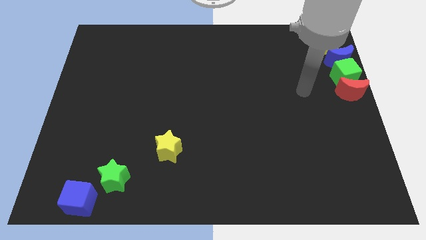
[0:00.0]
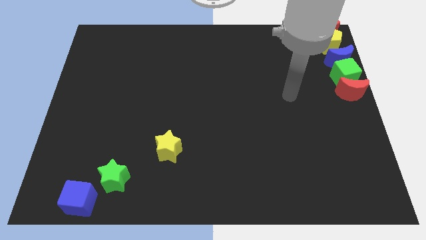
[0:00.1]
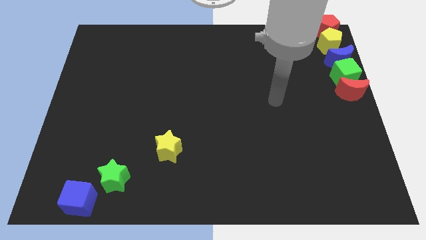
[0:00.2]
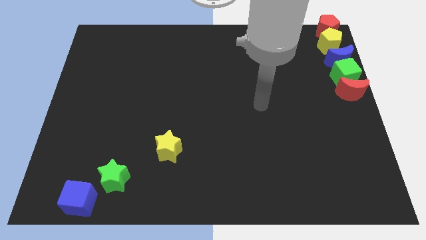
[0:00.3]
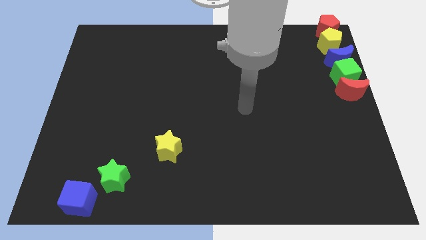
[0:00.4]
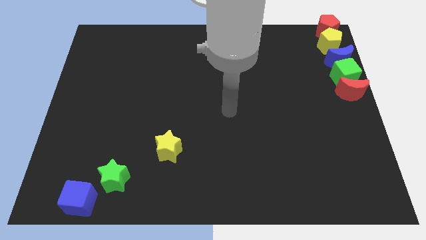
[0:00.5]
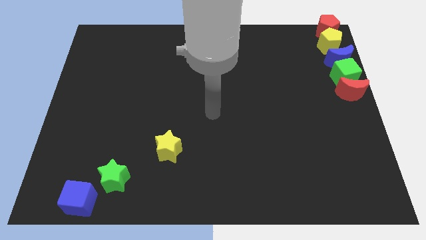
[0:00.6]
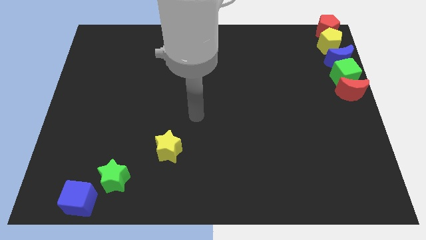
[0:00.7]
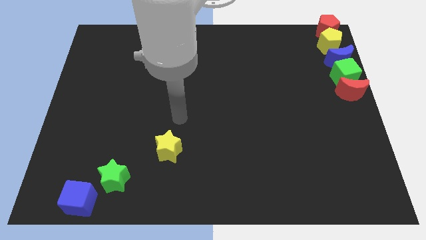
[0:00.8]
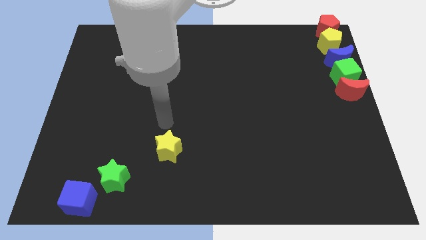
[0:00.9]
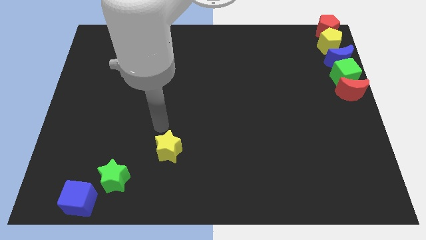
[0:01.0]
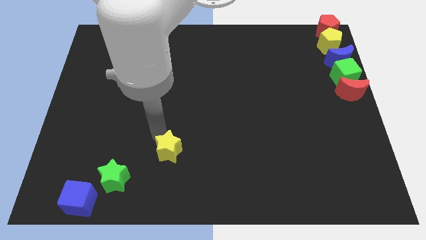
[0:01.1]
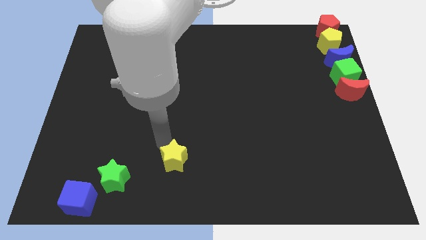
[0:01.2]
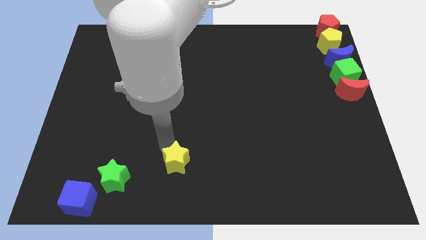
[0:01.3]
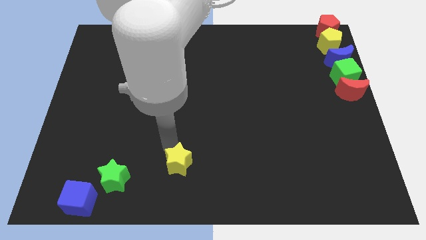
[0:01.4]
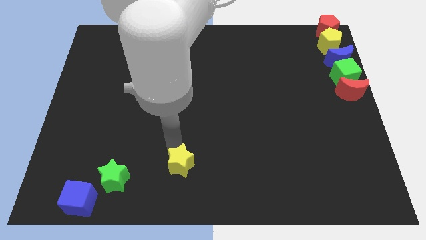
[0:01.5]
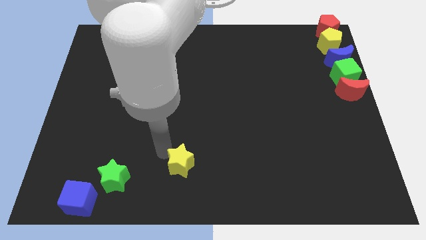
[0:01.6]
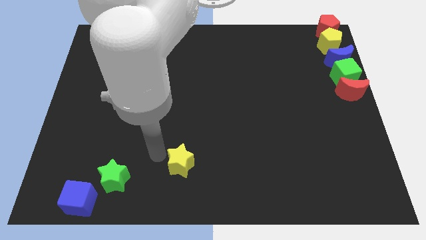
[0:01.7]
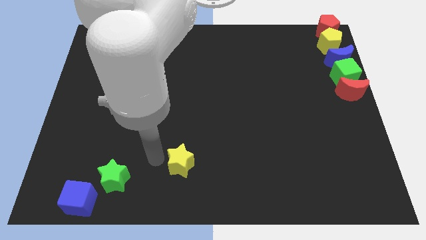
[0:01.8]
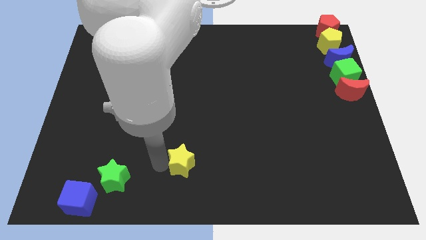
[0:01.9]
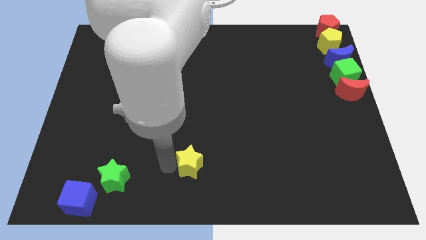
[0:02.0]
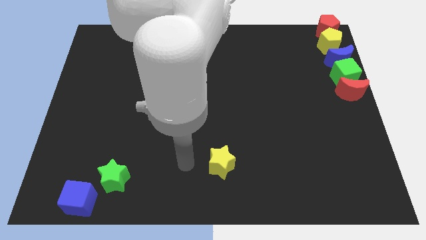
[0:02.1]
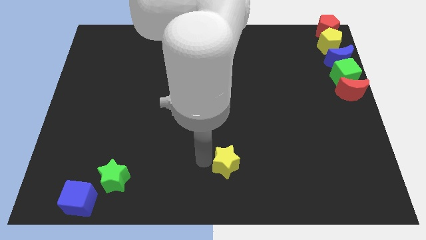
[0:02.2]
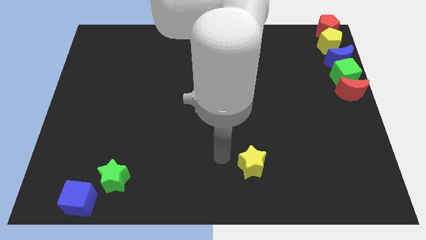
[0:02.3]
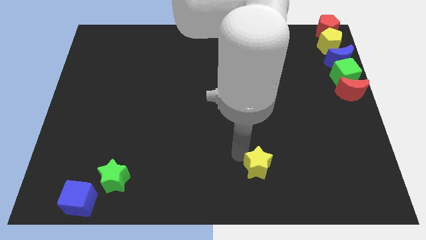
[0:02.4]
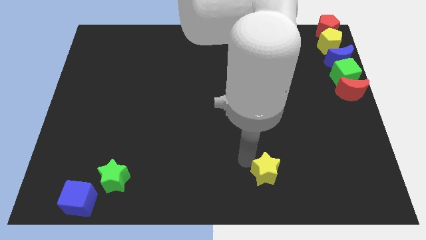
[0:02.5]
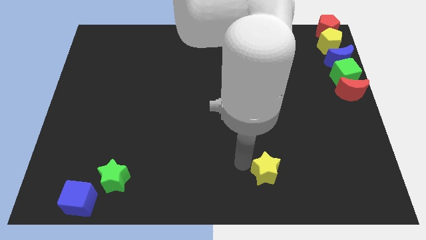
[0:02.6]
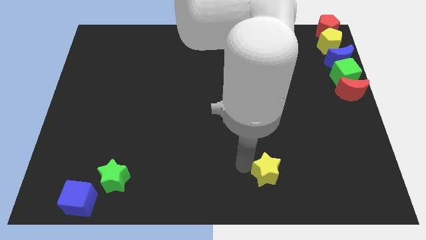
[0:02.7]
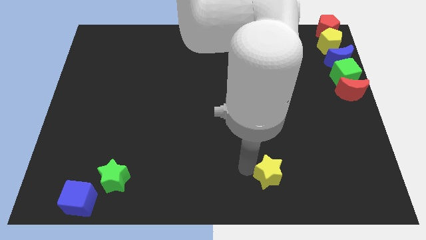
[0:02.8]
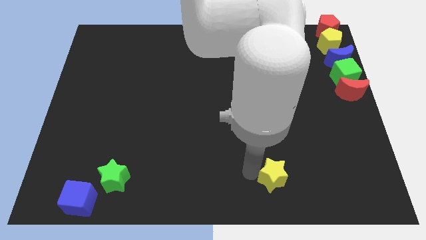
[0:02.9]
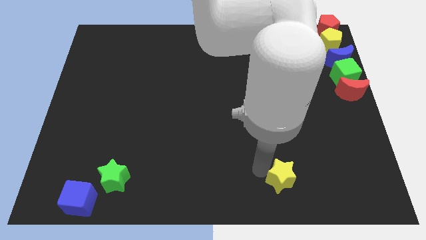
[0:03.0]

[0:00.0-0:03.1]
move the yellow star slightly towards right

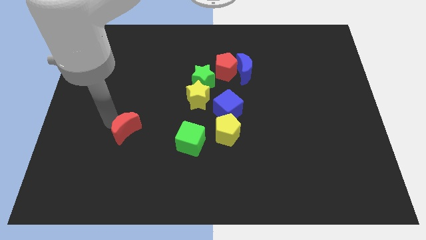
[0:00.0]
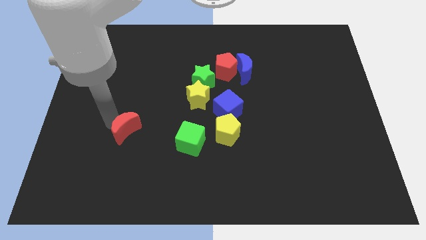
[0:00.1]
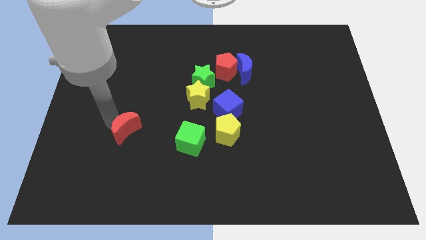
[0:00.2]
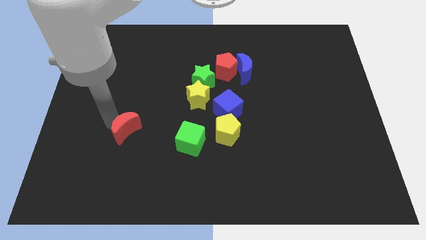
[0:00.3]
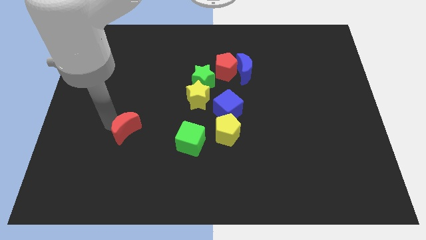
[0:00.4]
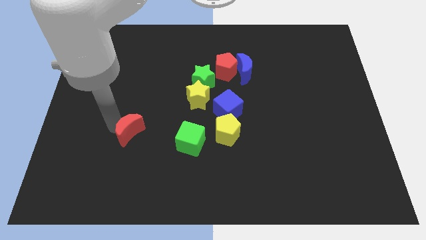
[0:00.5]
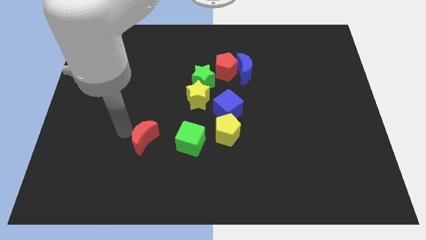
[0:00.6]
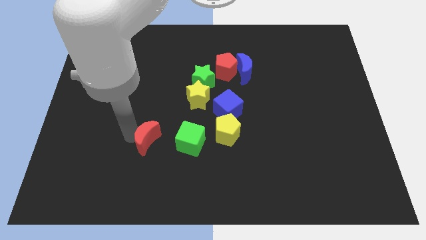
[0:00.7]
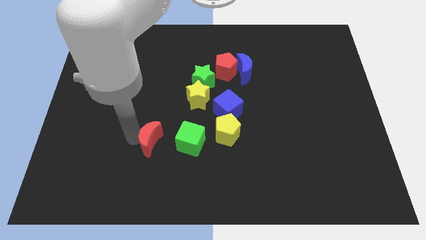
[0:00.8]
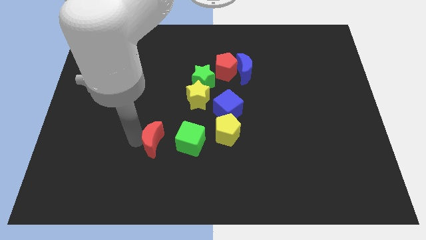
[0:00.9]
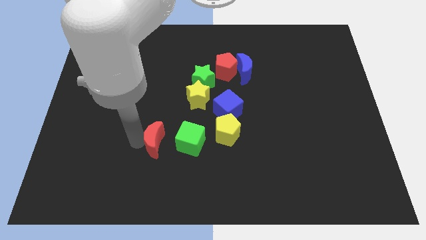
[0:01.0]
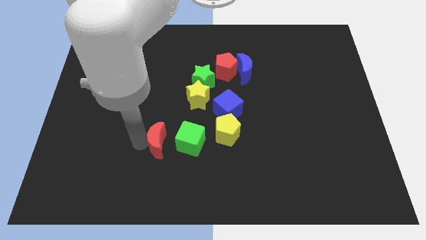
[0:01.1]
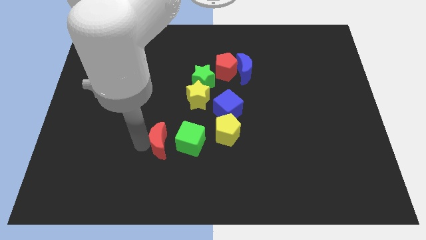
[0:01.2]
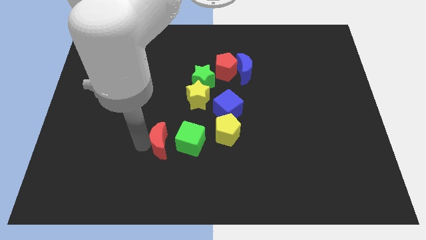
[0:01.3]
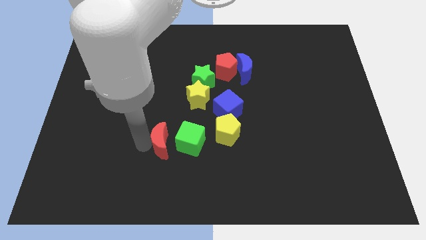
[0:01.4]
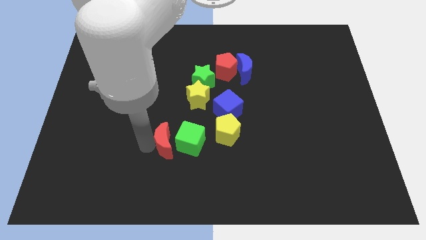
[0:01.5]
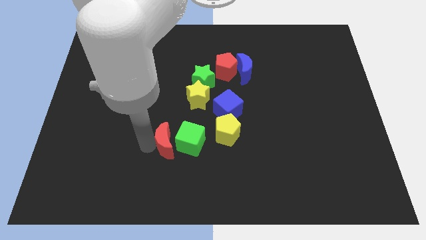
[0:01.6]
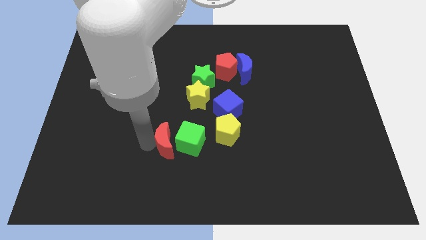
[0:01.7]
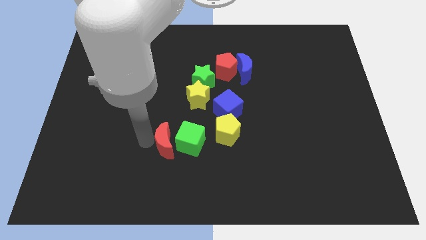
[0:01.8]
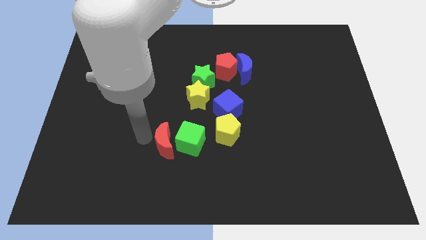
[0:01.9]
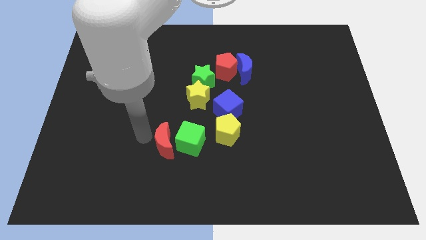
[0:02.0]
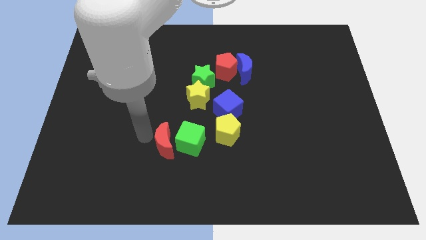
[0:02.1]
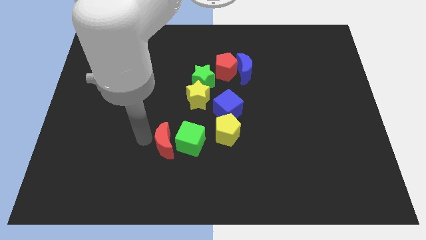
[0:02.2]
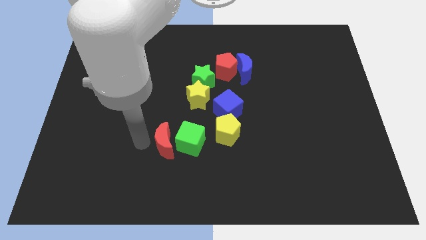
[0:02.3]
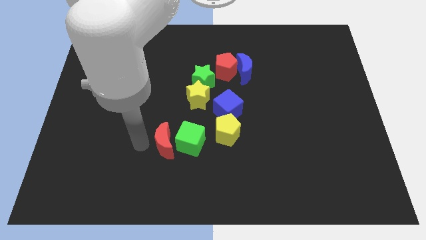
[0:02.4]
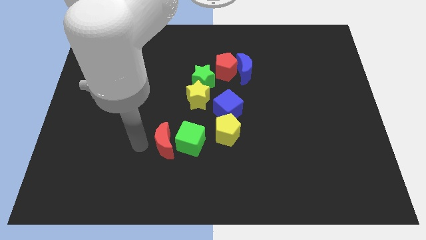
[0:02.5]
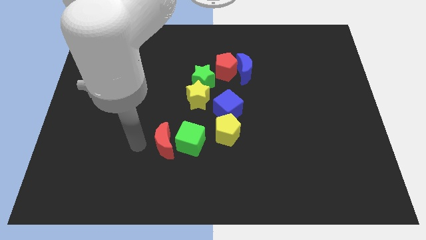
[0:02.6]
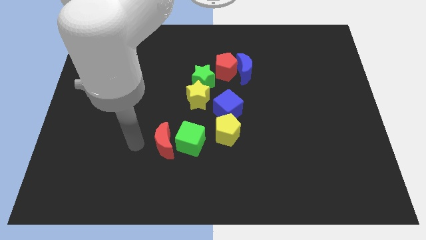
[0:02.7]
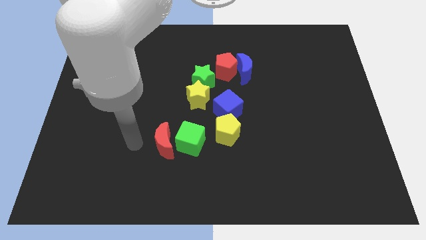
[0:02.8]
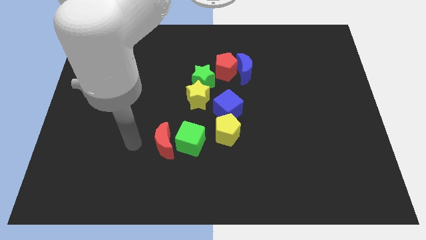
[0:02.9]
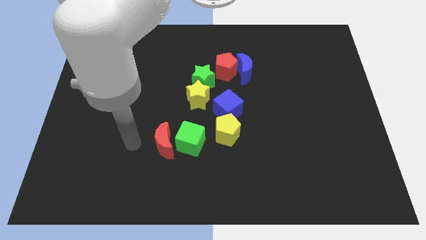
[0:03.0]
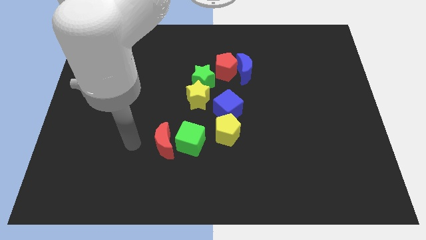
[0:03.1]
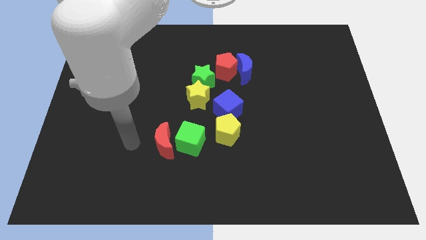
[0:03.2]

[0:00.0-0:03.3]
move the red moon close to the green cube

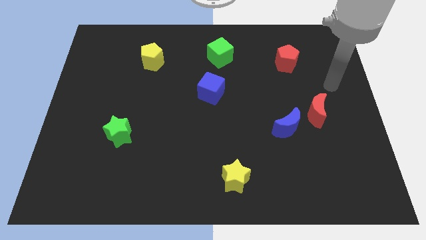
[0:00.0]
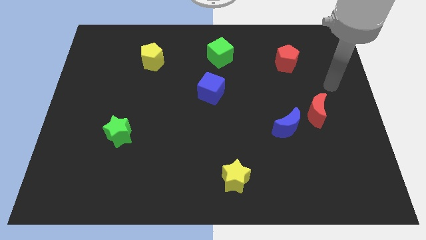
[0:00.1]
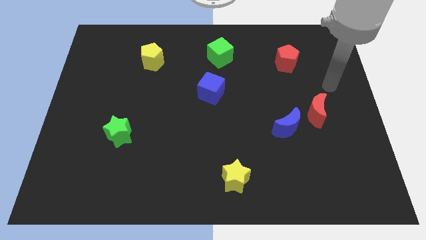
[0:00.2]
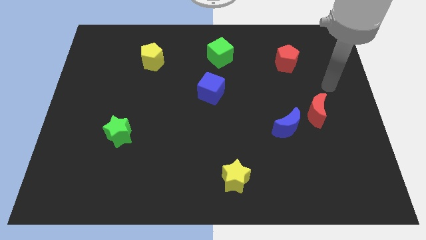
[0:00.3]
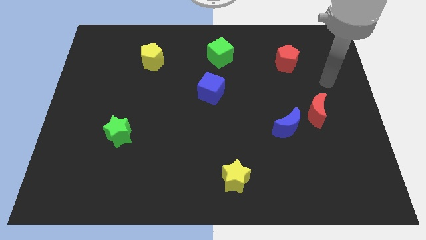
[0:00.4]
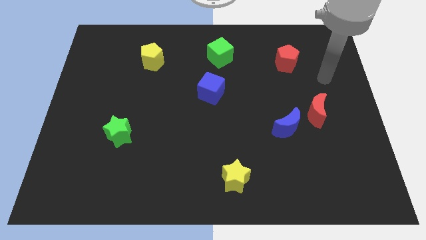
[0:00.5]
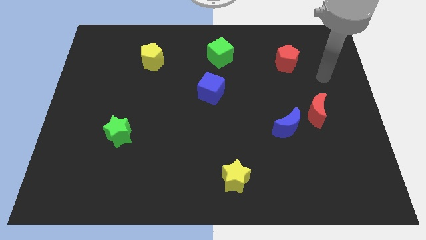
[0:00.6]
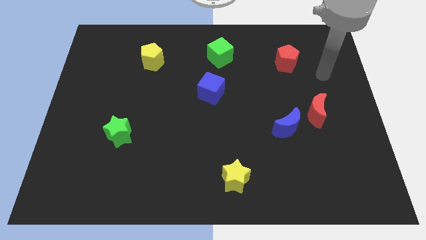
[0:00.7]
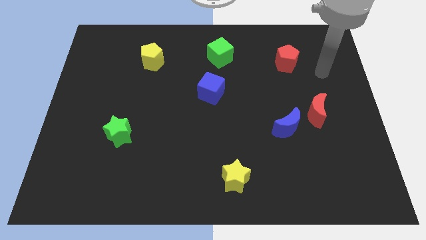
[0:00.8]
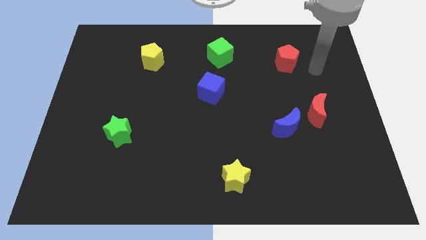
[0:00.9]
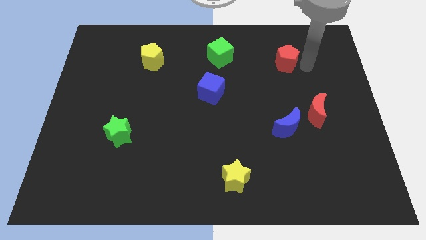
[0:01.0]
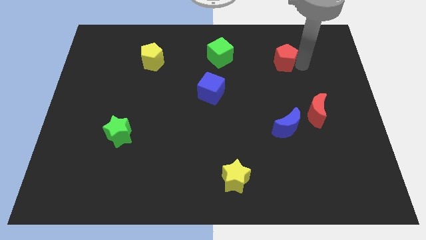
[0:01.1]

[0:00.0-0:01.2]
move your arm to the right of red pentagon

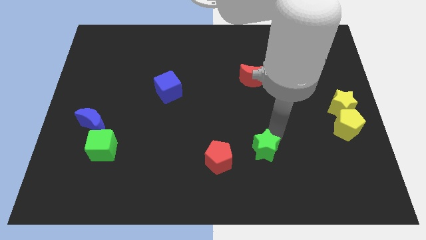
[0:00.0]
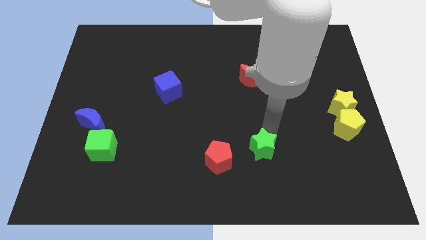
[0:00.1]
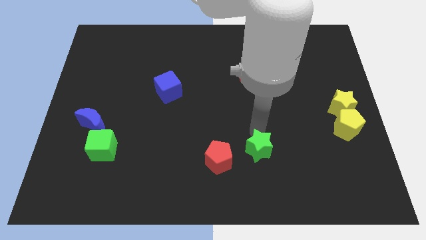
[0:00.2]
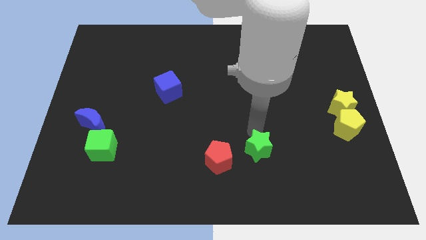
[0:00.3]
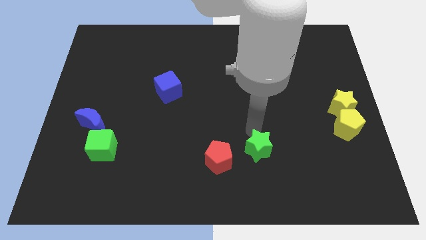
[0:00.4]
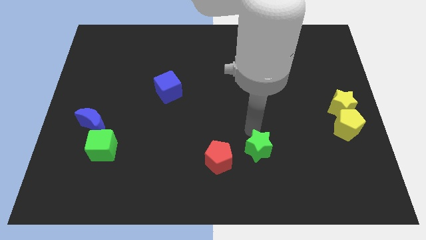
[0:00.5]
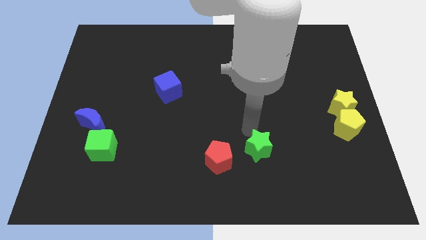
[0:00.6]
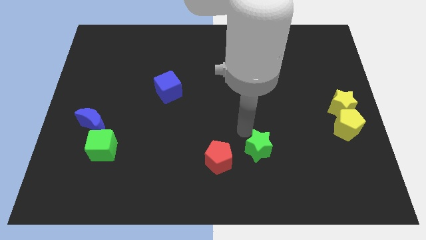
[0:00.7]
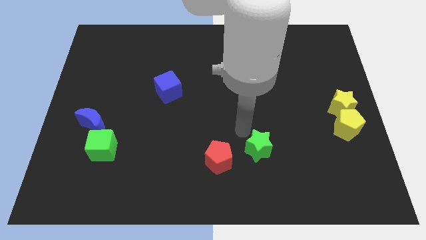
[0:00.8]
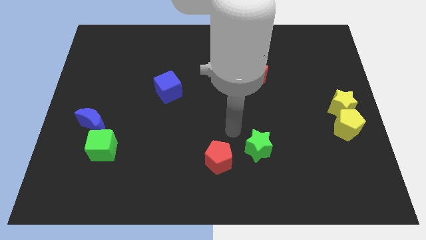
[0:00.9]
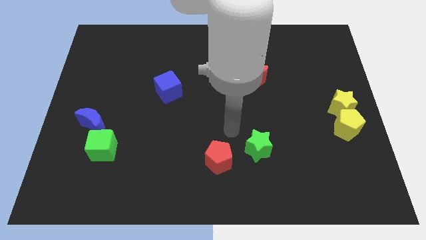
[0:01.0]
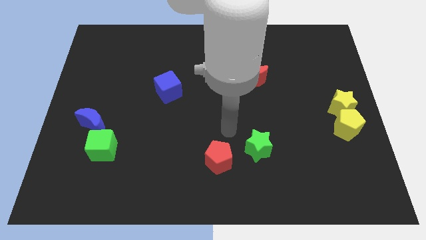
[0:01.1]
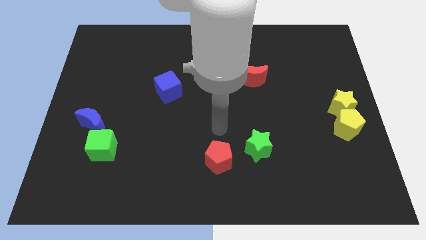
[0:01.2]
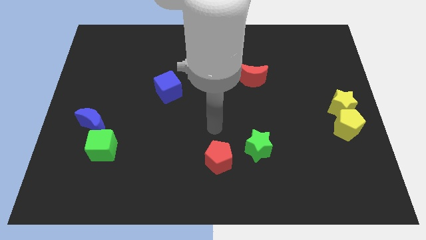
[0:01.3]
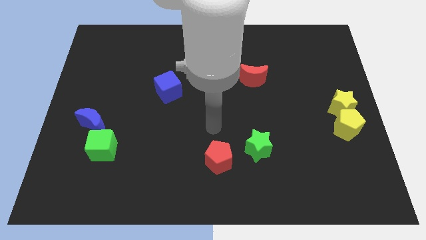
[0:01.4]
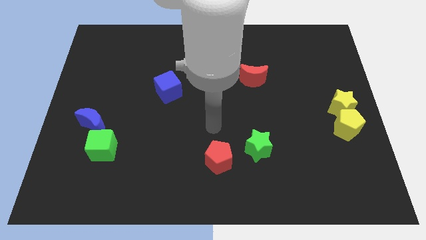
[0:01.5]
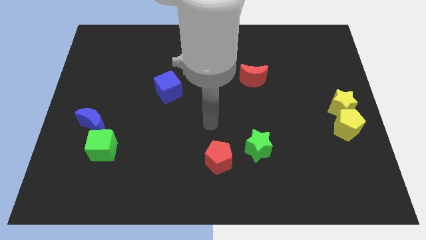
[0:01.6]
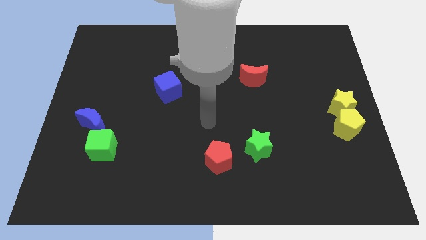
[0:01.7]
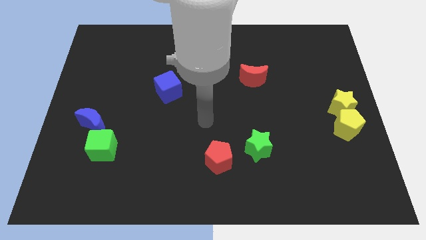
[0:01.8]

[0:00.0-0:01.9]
slightly push the green star towards the red pentagon
